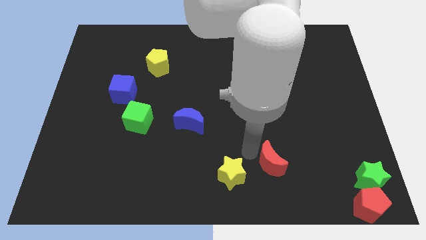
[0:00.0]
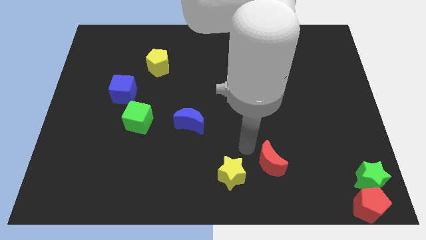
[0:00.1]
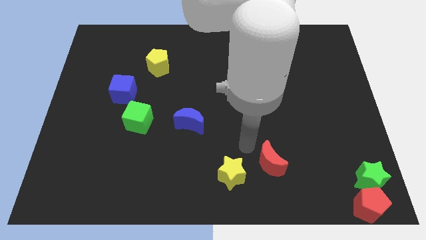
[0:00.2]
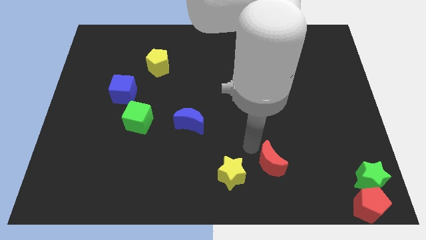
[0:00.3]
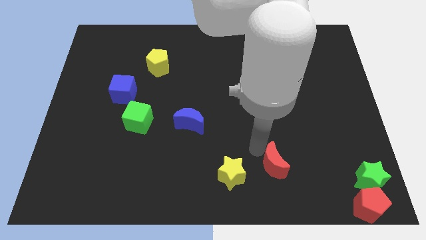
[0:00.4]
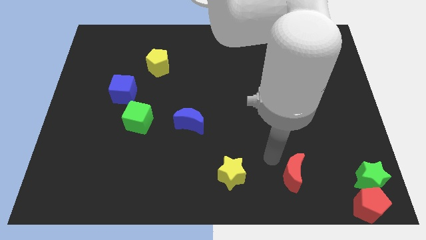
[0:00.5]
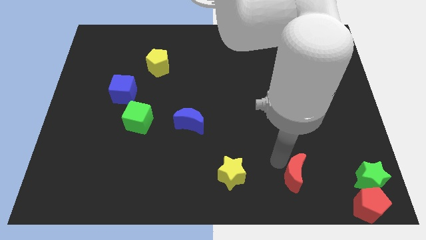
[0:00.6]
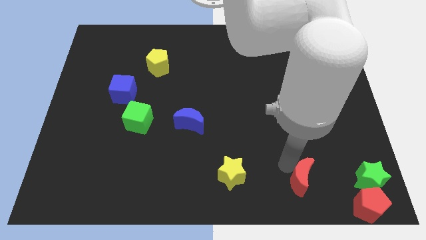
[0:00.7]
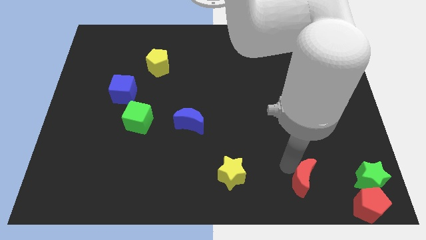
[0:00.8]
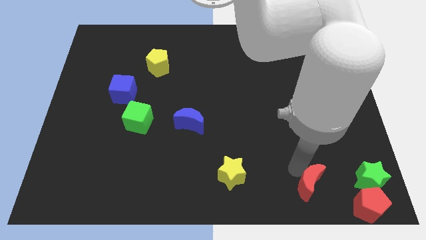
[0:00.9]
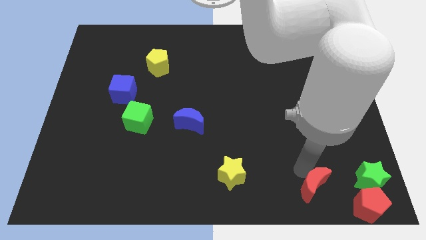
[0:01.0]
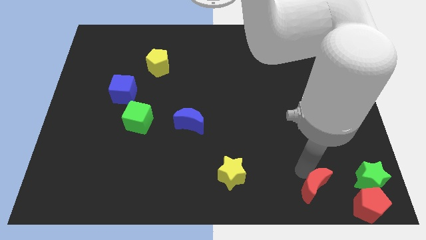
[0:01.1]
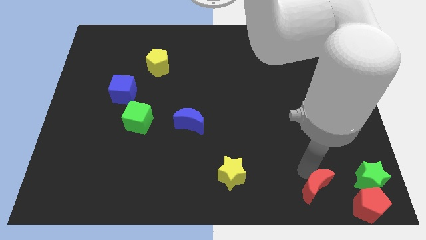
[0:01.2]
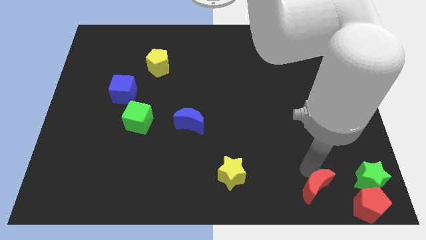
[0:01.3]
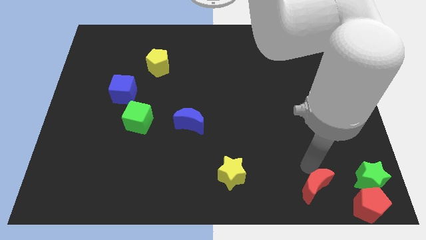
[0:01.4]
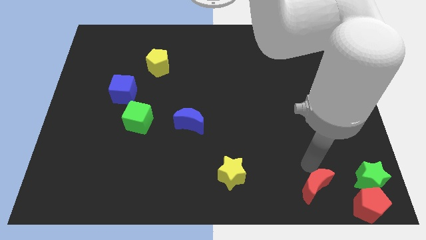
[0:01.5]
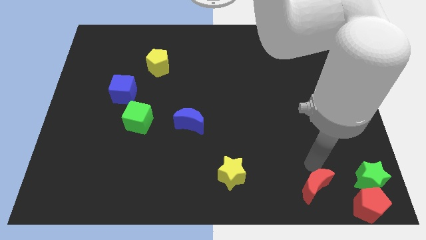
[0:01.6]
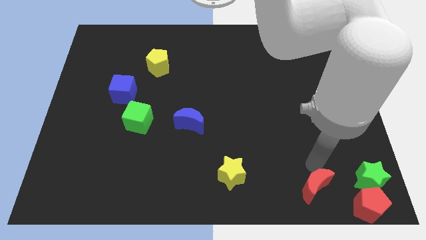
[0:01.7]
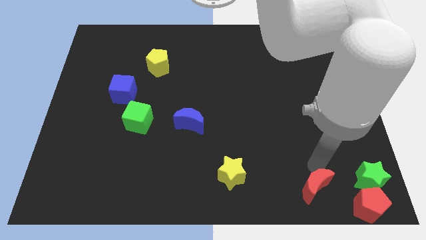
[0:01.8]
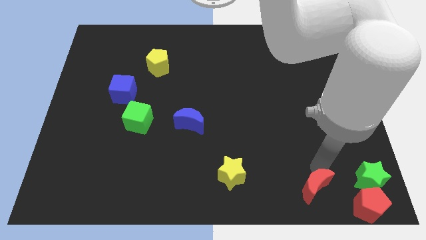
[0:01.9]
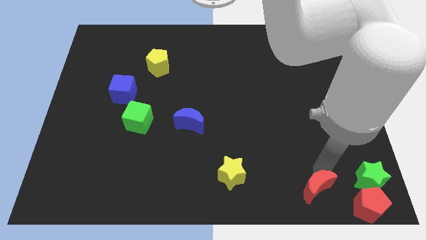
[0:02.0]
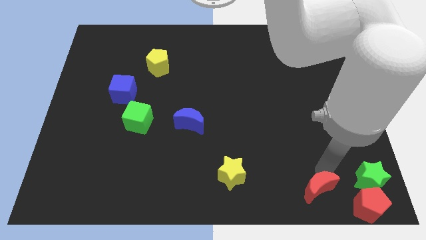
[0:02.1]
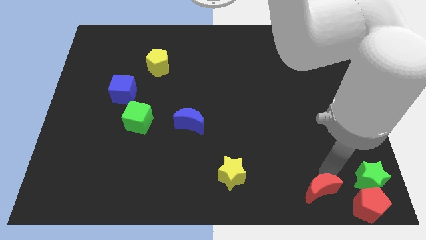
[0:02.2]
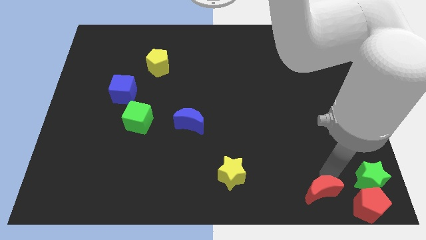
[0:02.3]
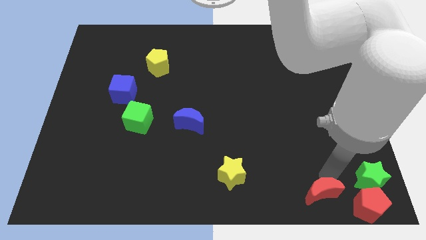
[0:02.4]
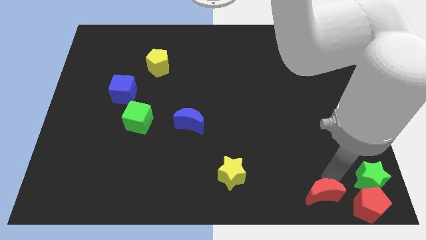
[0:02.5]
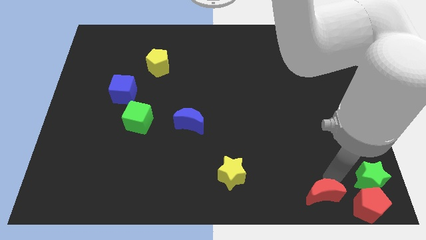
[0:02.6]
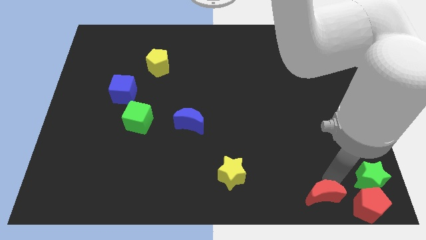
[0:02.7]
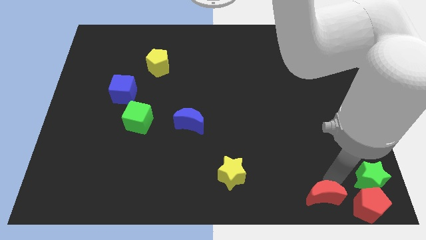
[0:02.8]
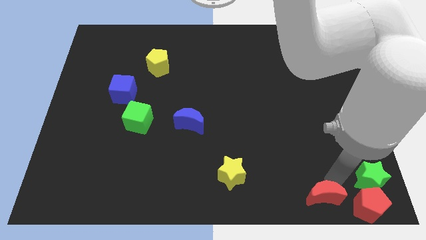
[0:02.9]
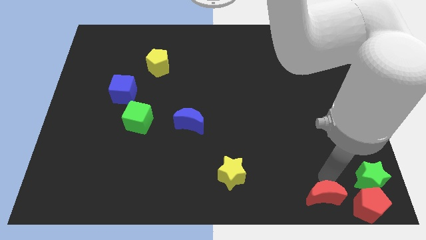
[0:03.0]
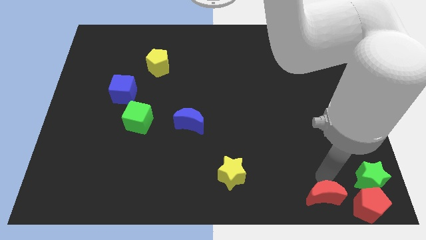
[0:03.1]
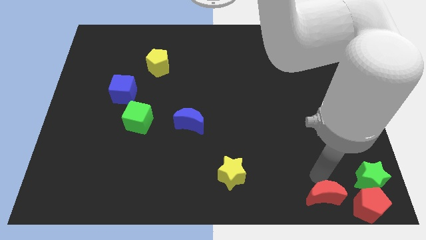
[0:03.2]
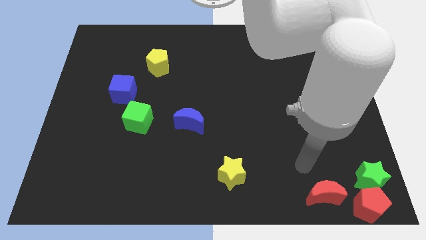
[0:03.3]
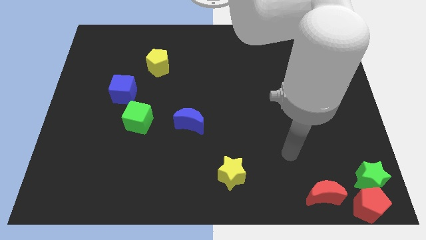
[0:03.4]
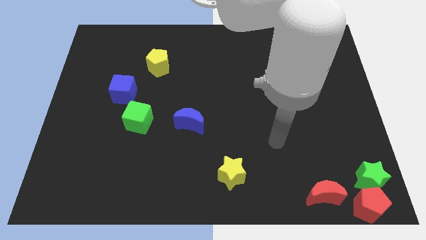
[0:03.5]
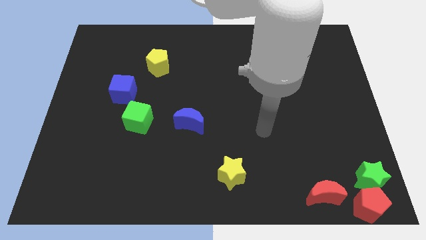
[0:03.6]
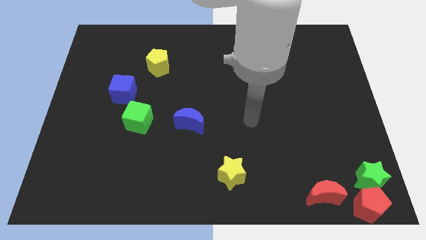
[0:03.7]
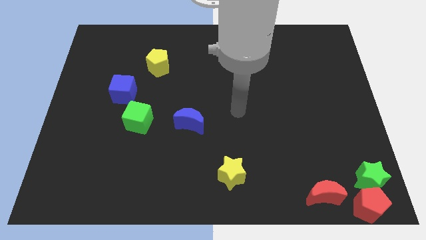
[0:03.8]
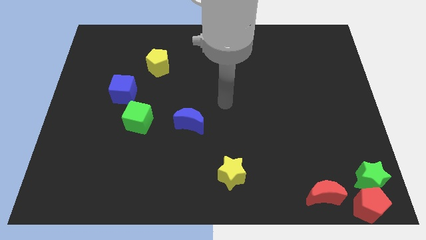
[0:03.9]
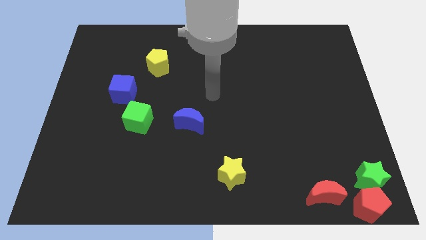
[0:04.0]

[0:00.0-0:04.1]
place red moon to the left of red pentagon

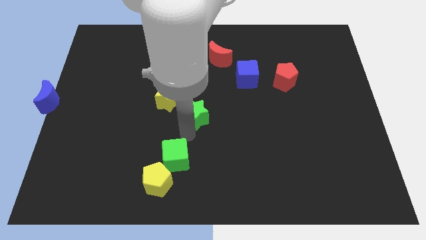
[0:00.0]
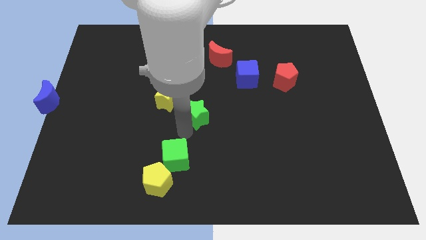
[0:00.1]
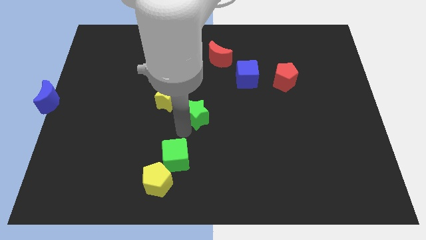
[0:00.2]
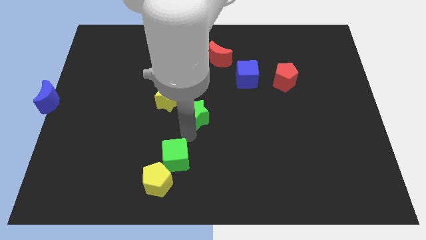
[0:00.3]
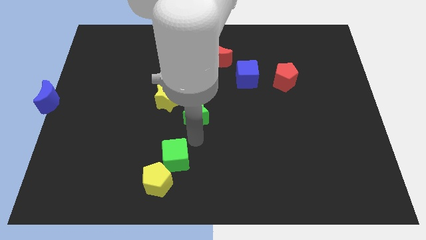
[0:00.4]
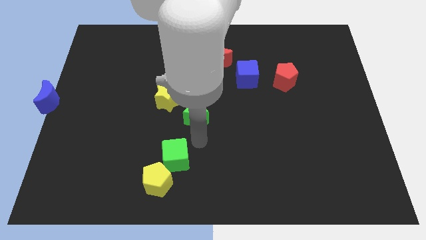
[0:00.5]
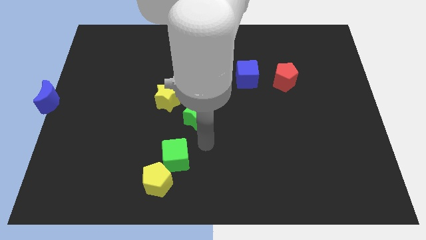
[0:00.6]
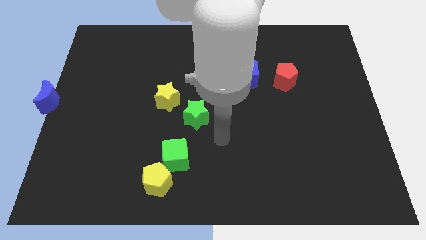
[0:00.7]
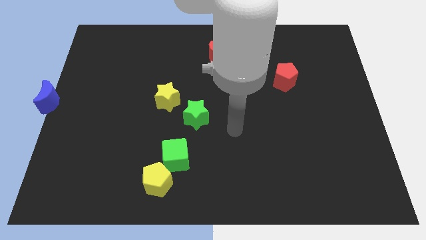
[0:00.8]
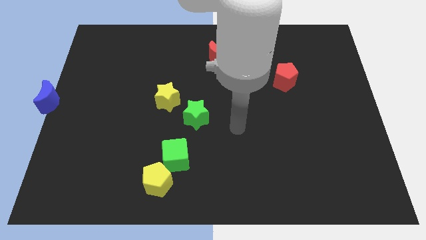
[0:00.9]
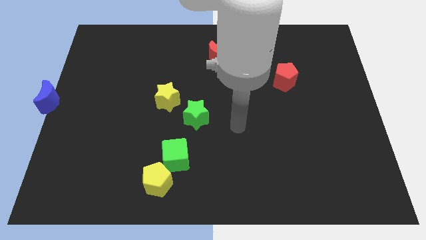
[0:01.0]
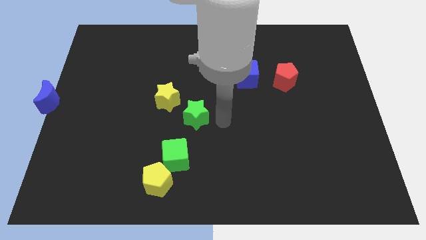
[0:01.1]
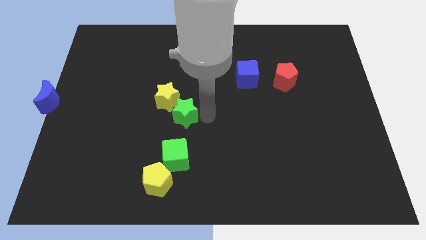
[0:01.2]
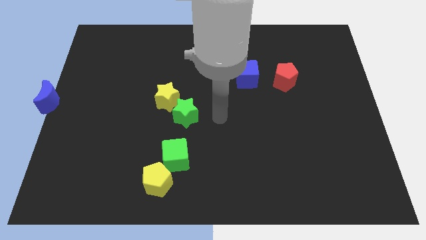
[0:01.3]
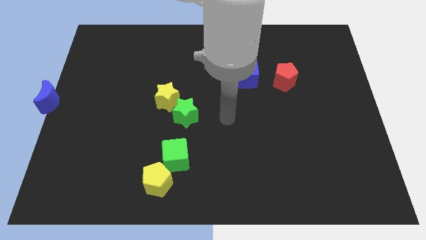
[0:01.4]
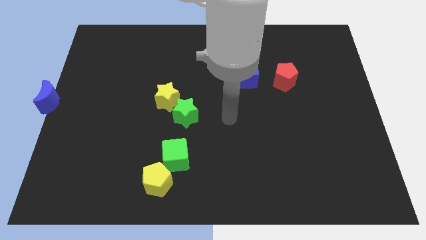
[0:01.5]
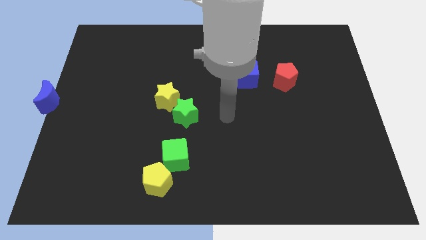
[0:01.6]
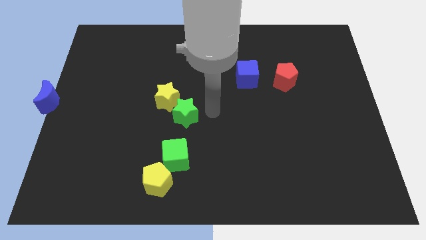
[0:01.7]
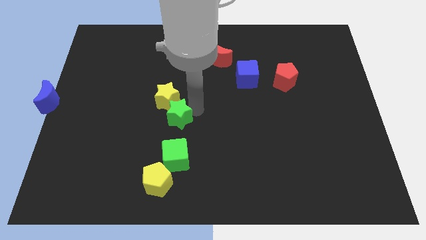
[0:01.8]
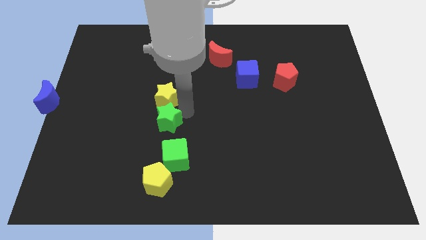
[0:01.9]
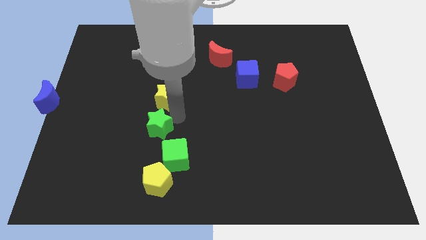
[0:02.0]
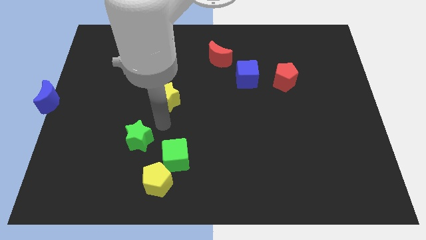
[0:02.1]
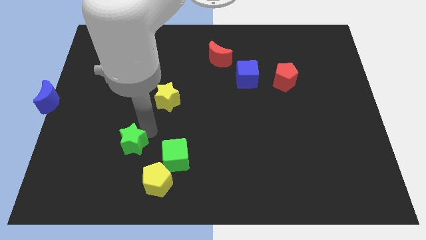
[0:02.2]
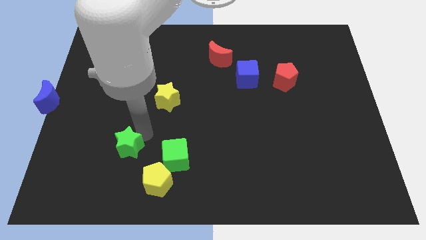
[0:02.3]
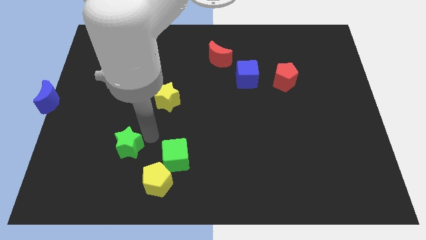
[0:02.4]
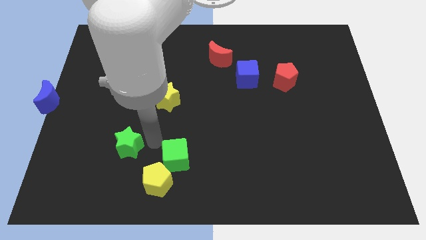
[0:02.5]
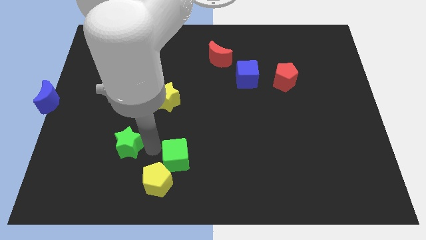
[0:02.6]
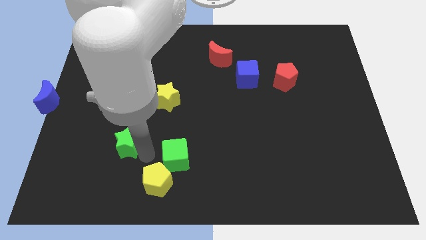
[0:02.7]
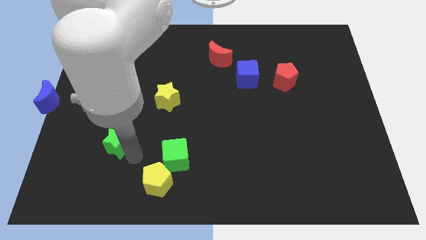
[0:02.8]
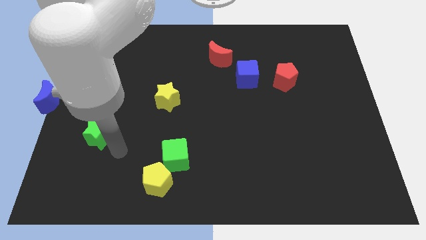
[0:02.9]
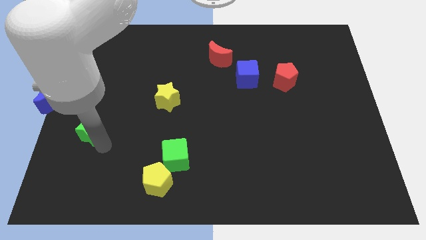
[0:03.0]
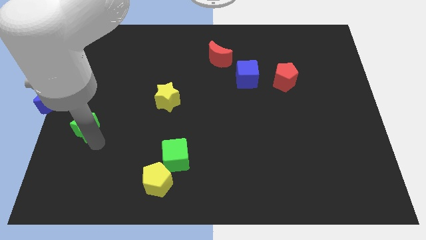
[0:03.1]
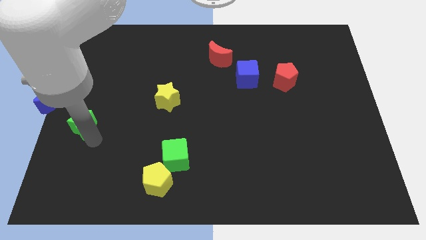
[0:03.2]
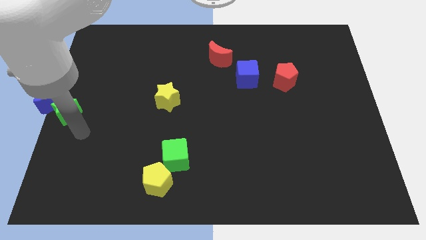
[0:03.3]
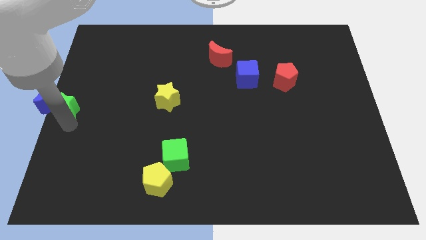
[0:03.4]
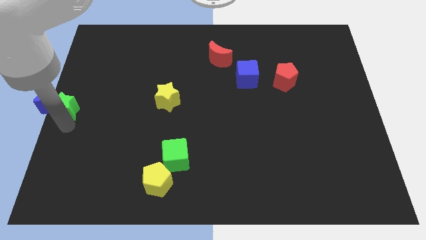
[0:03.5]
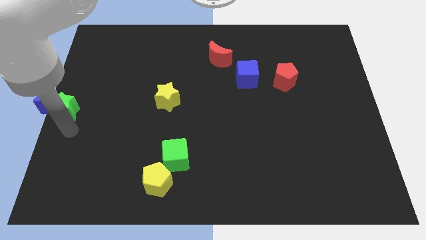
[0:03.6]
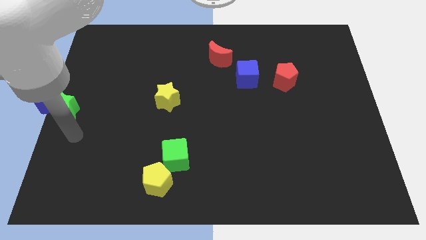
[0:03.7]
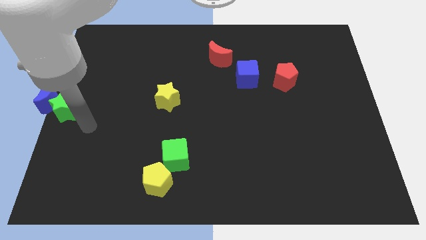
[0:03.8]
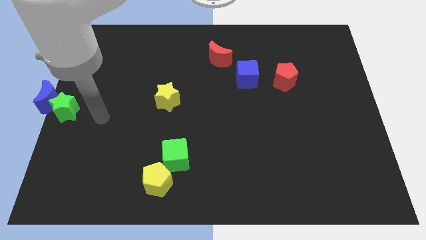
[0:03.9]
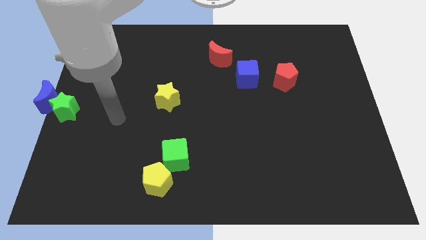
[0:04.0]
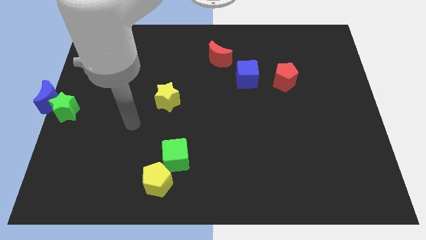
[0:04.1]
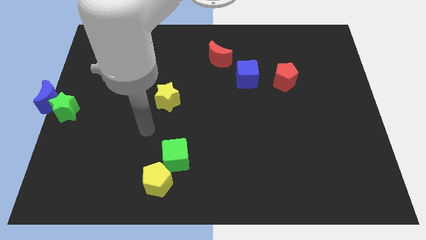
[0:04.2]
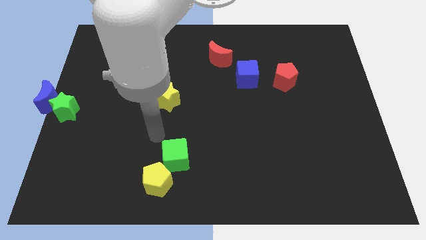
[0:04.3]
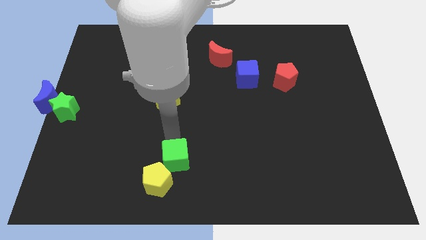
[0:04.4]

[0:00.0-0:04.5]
place the green star close to the blue moon at the center left

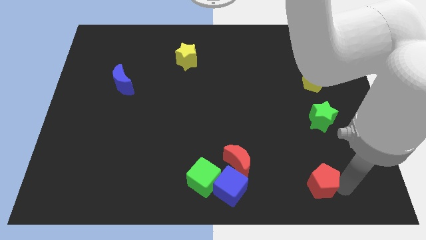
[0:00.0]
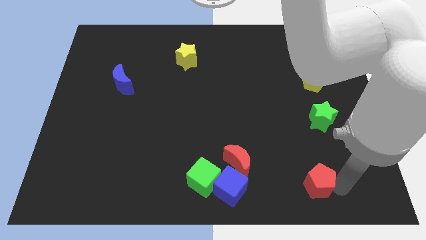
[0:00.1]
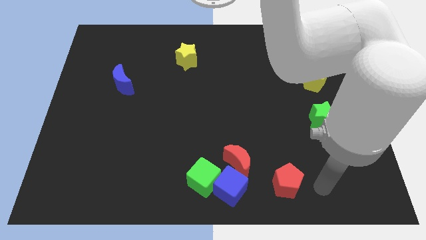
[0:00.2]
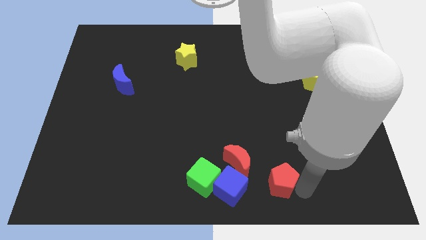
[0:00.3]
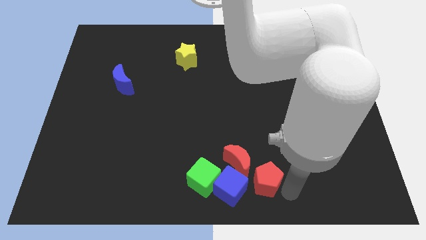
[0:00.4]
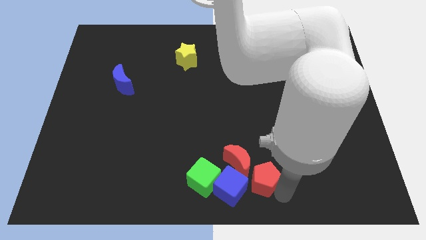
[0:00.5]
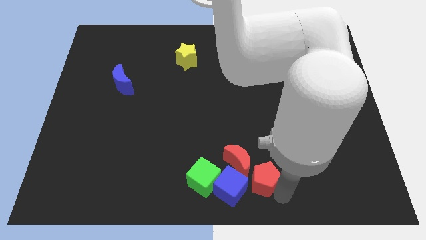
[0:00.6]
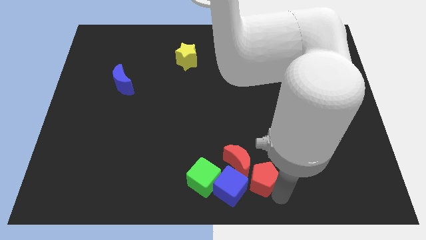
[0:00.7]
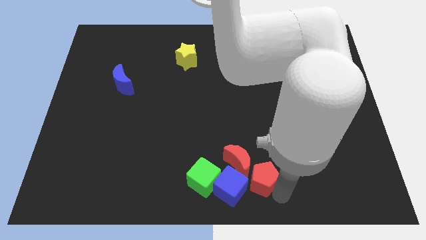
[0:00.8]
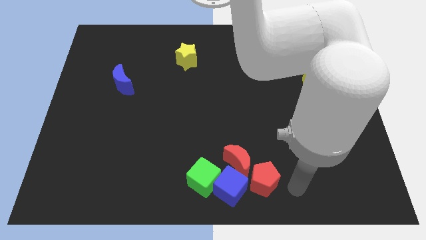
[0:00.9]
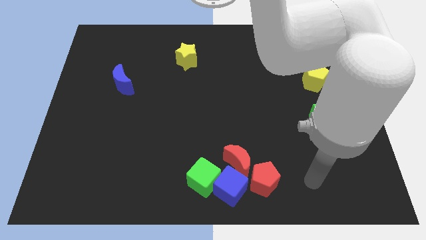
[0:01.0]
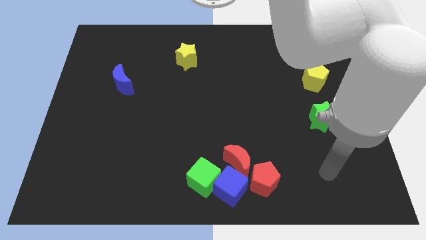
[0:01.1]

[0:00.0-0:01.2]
push the red pentagon to the right of the red crescent
